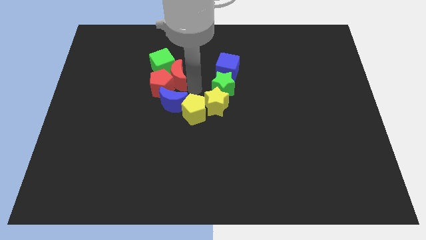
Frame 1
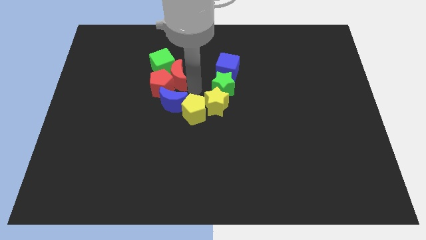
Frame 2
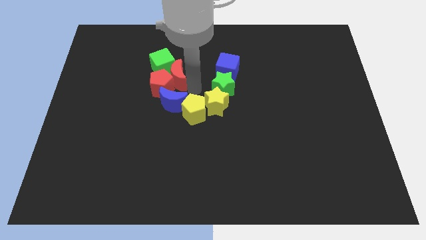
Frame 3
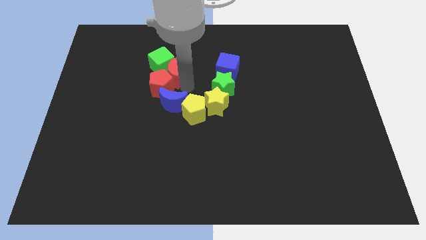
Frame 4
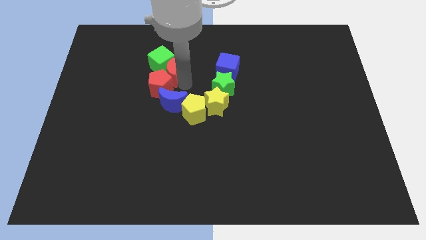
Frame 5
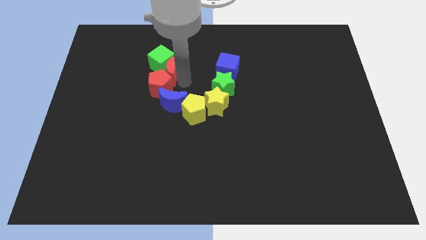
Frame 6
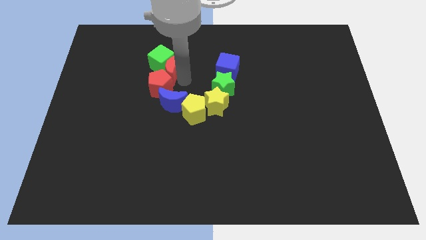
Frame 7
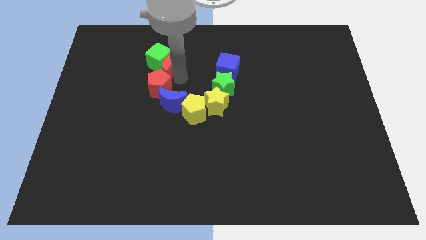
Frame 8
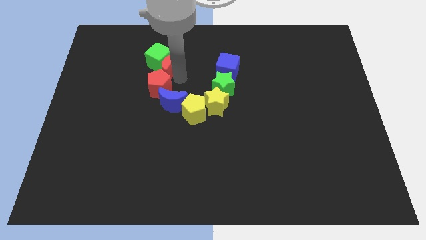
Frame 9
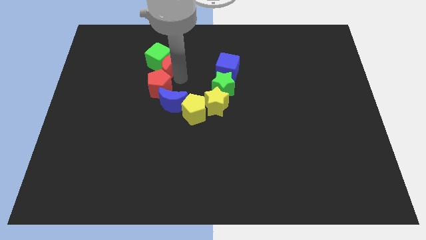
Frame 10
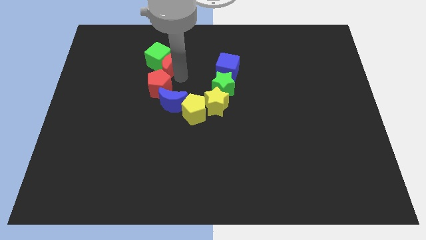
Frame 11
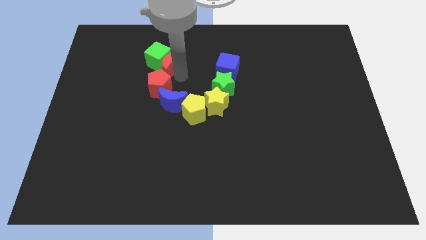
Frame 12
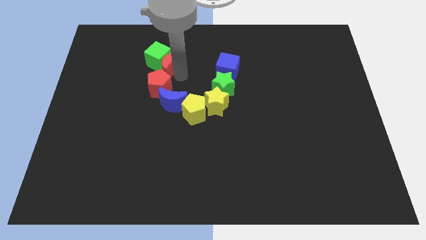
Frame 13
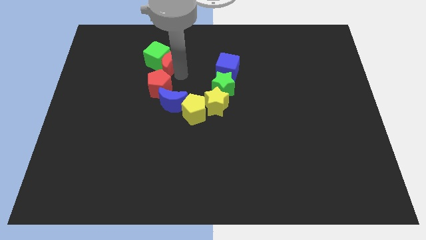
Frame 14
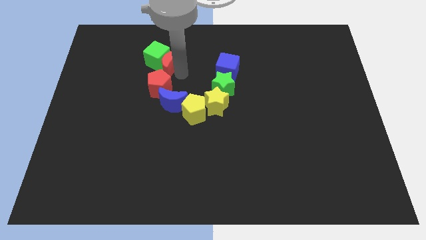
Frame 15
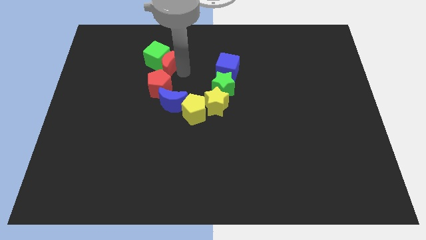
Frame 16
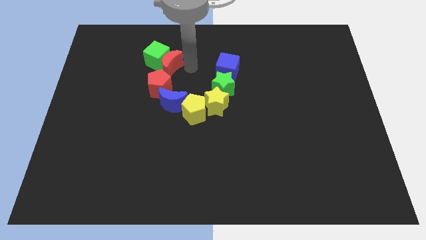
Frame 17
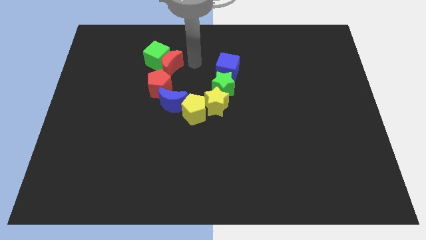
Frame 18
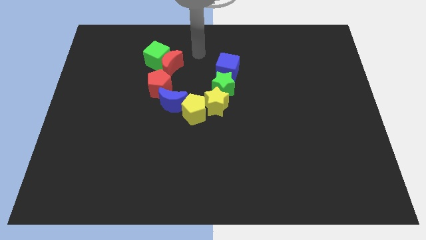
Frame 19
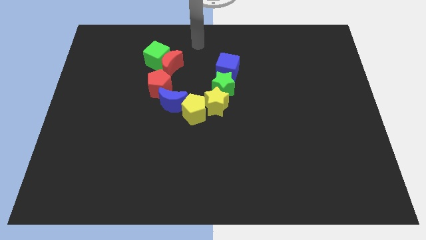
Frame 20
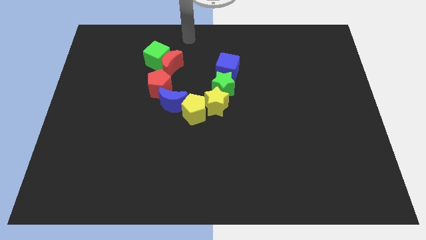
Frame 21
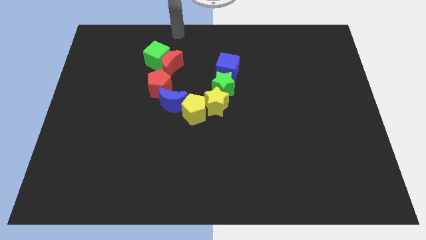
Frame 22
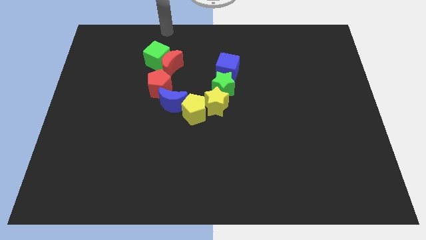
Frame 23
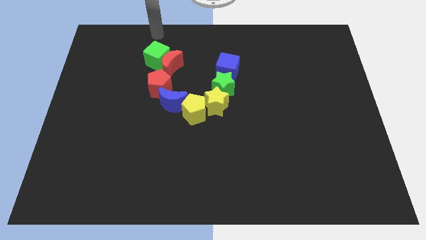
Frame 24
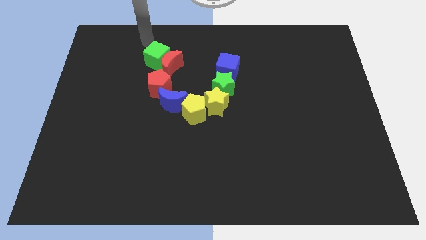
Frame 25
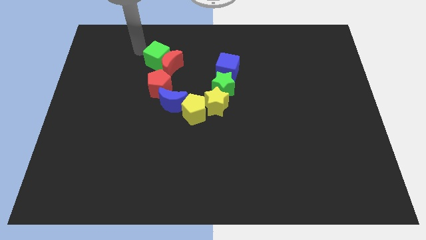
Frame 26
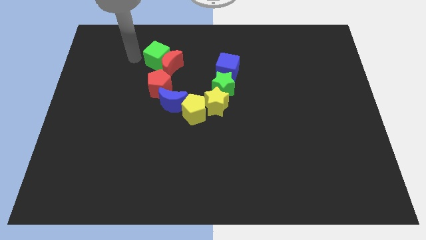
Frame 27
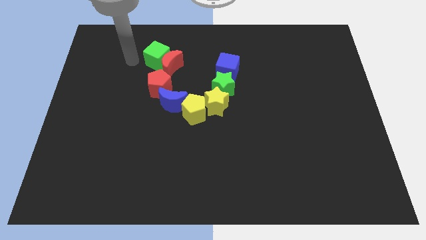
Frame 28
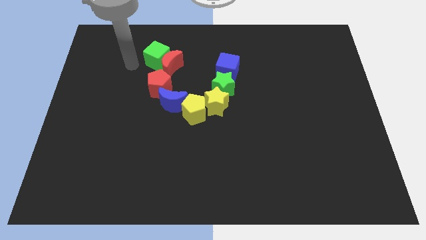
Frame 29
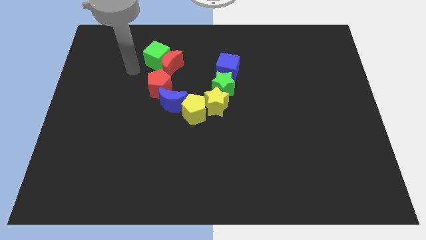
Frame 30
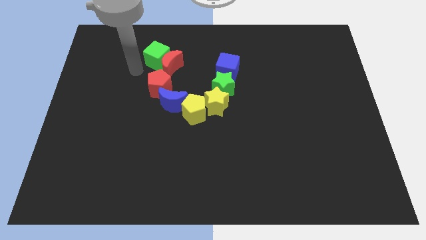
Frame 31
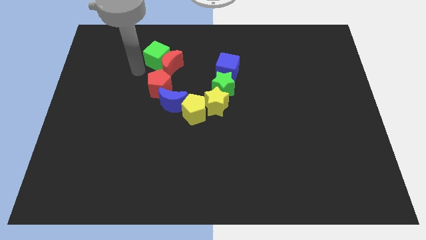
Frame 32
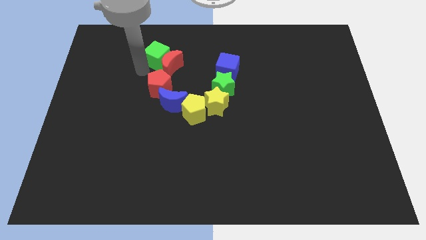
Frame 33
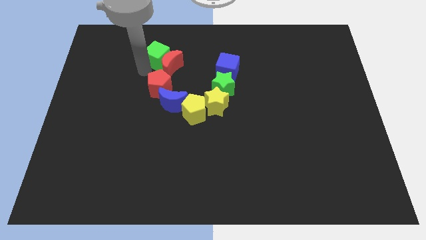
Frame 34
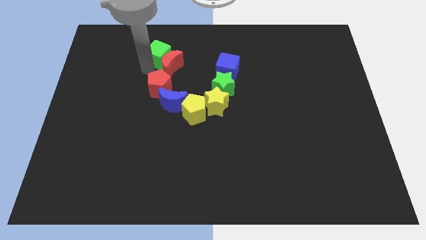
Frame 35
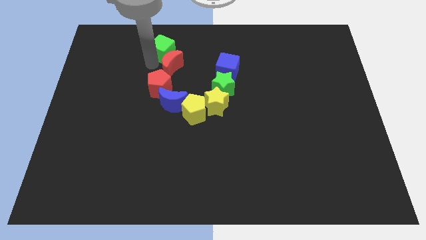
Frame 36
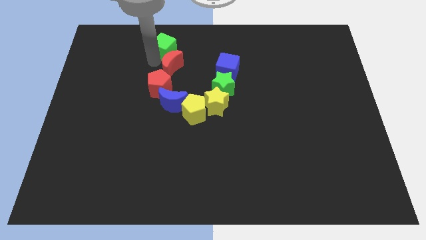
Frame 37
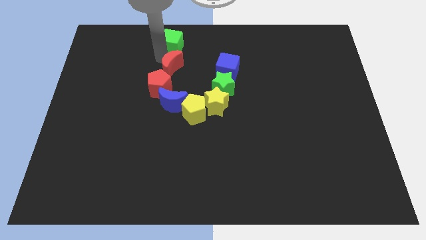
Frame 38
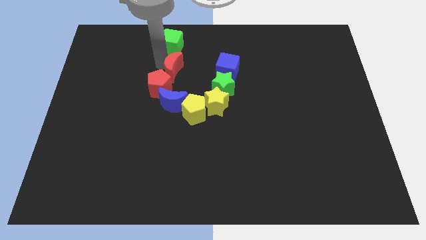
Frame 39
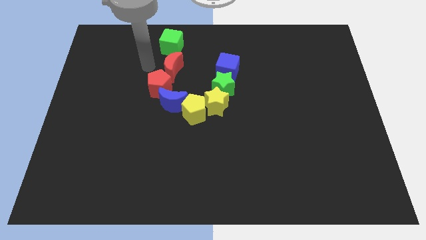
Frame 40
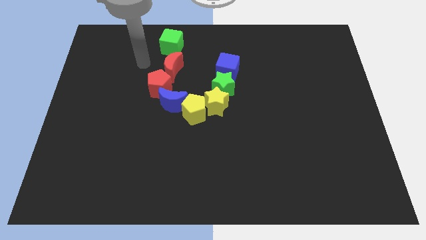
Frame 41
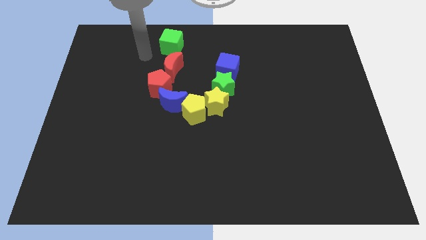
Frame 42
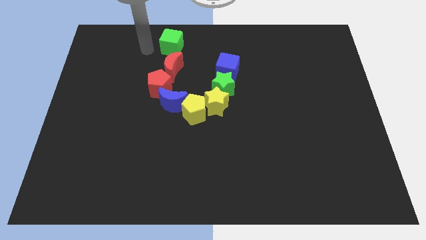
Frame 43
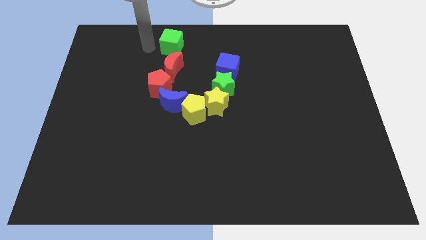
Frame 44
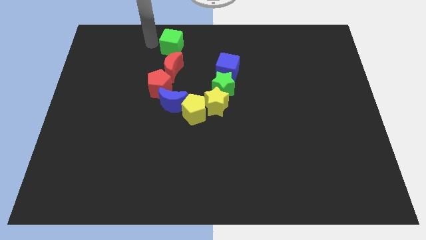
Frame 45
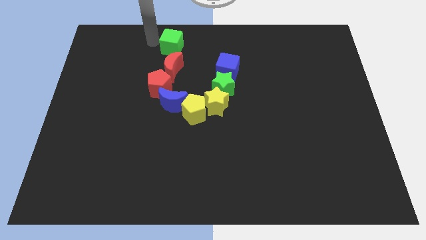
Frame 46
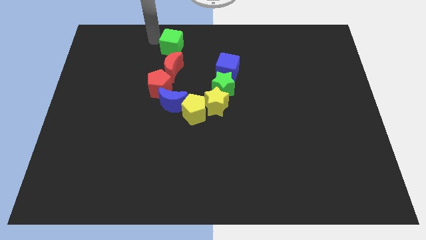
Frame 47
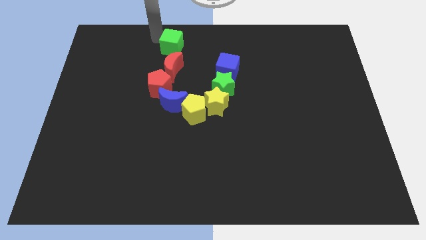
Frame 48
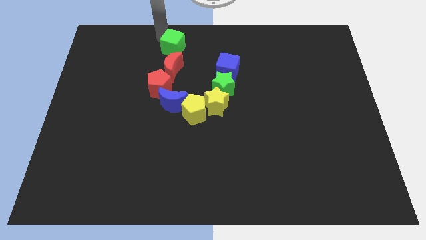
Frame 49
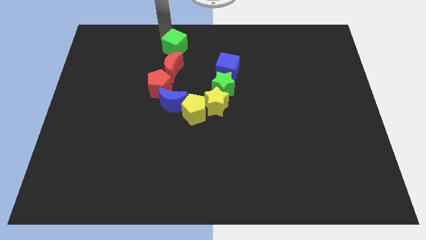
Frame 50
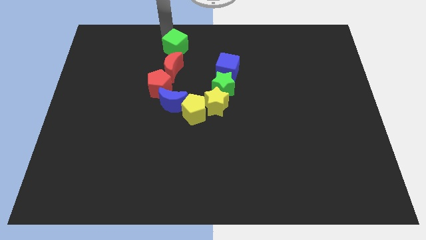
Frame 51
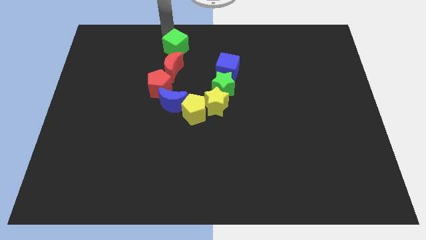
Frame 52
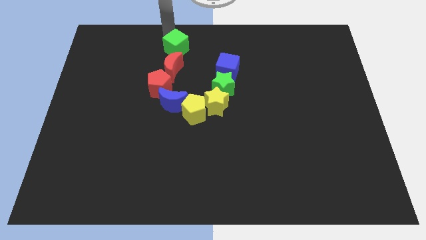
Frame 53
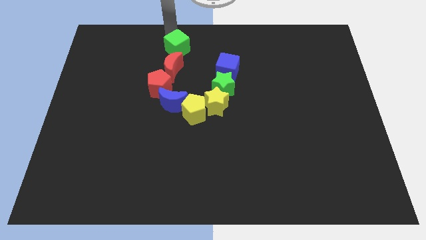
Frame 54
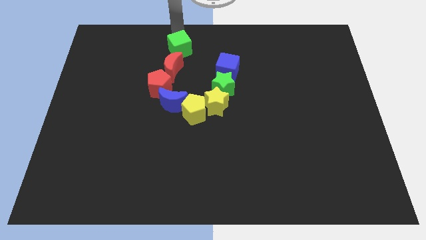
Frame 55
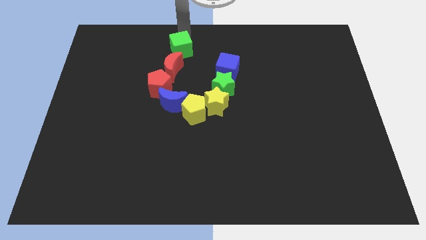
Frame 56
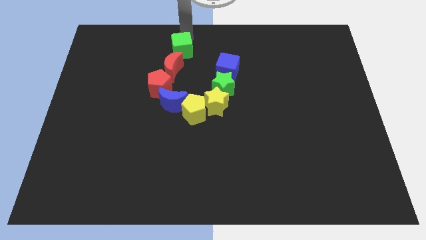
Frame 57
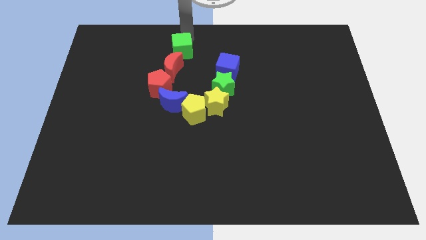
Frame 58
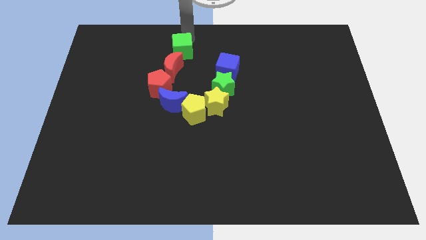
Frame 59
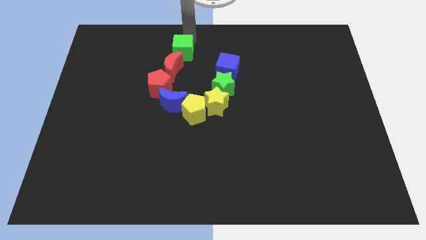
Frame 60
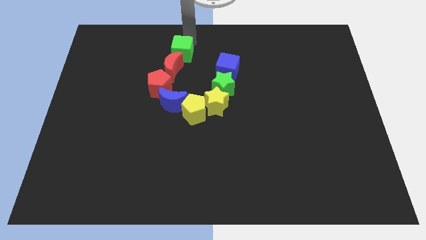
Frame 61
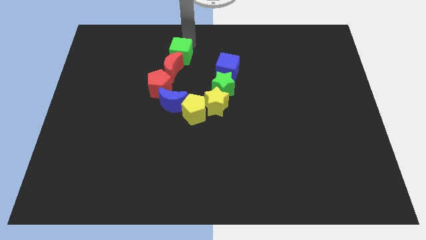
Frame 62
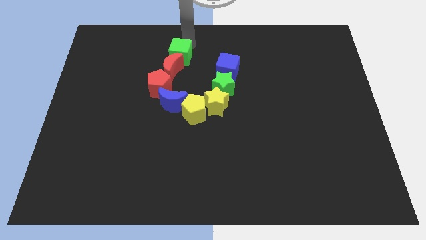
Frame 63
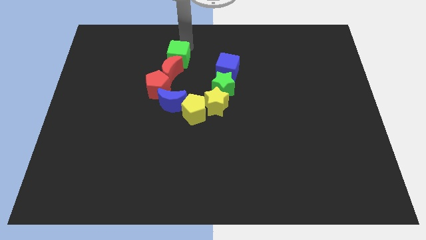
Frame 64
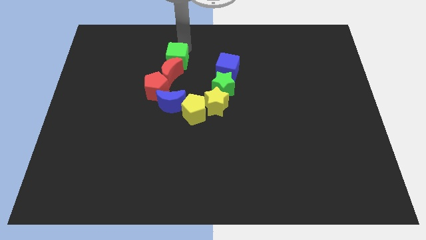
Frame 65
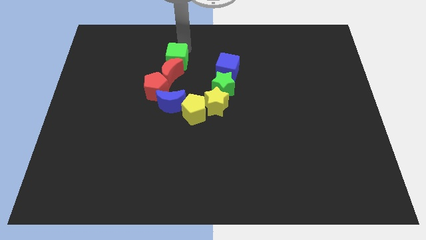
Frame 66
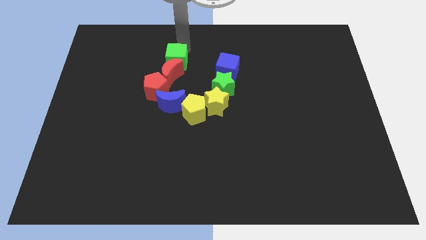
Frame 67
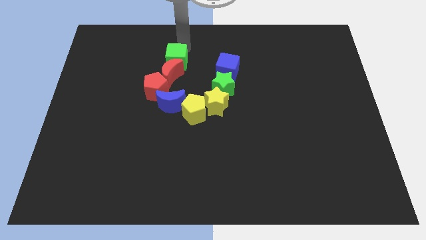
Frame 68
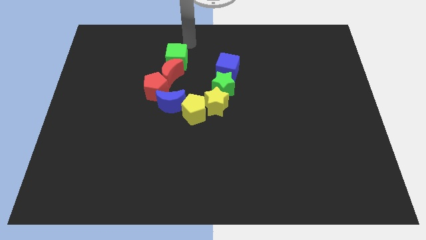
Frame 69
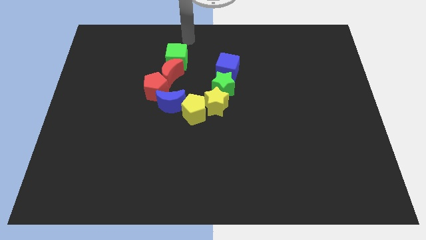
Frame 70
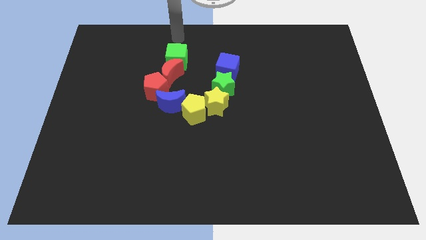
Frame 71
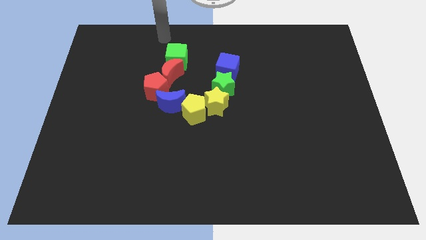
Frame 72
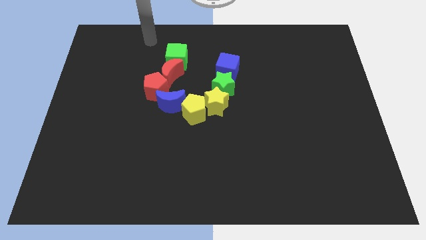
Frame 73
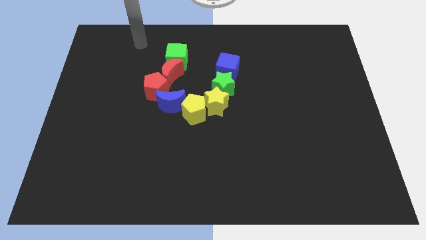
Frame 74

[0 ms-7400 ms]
slightly touch the red crescent along with the green cube

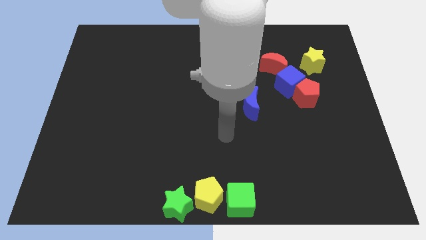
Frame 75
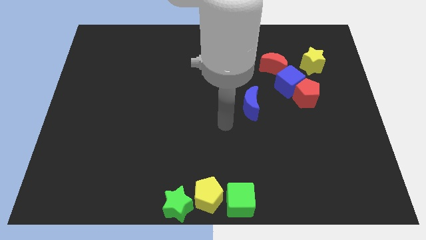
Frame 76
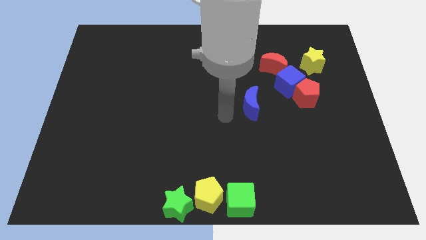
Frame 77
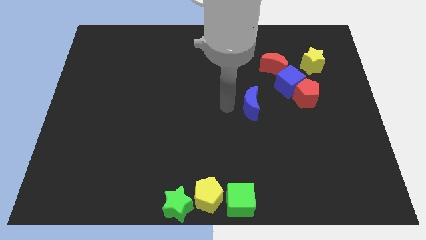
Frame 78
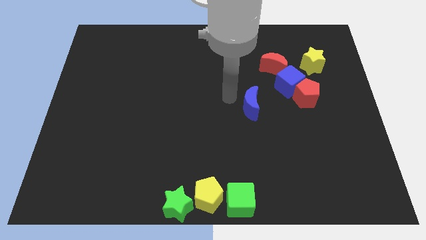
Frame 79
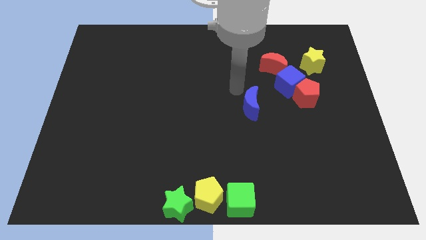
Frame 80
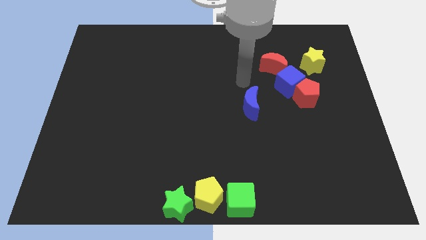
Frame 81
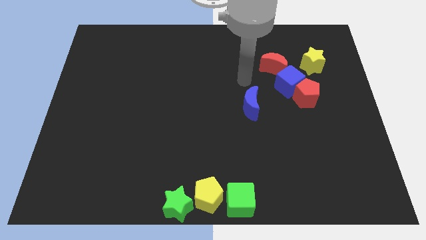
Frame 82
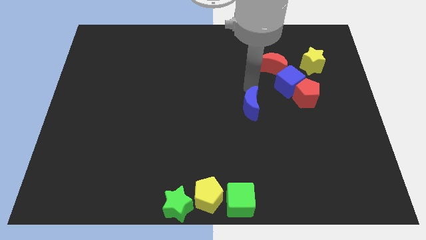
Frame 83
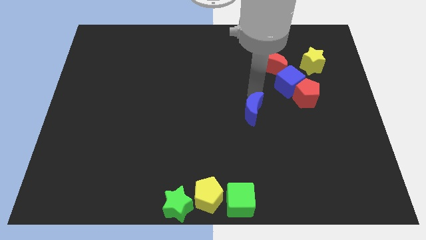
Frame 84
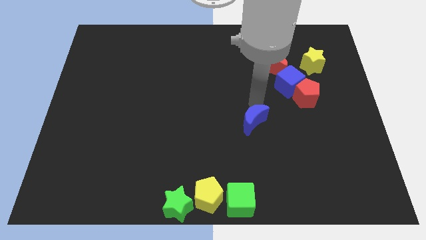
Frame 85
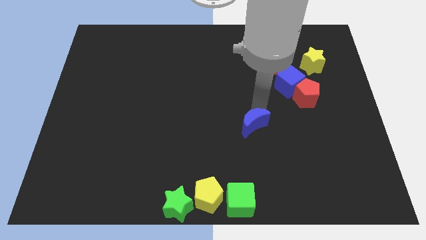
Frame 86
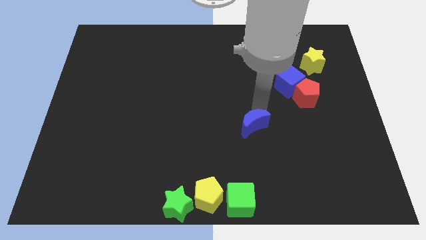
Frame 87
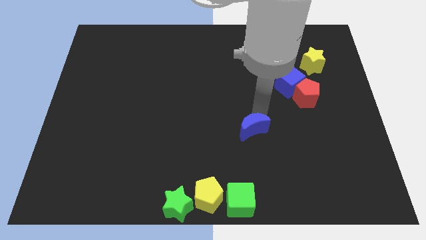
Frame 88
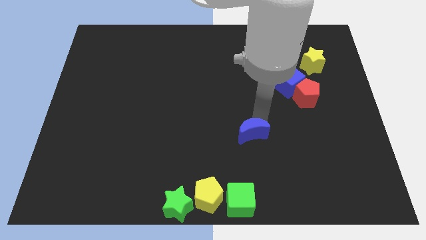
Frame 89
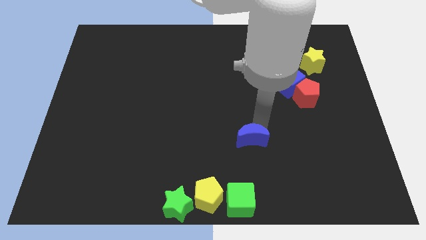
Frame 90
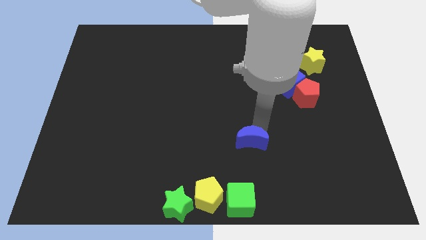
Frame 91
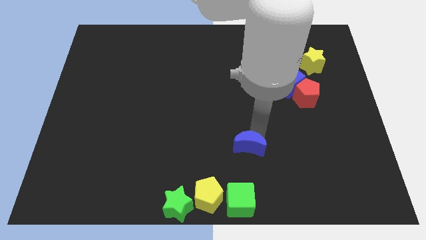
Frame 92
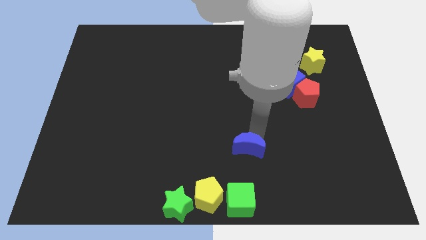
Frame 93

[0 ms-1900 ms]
push the blue crescent to the top of the green cube
